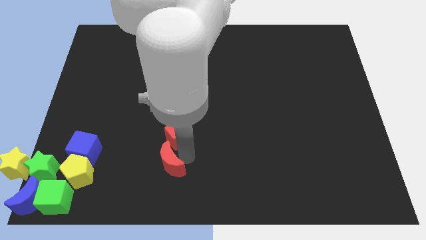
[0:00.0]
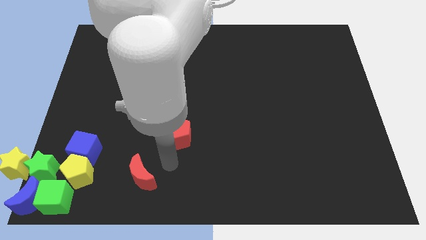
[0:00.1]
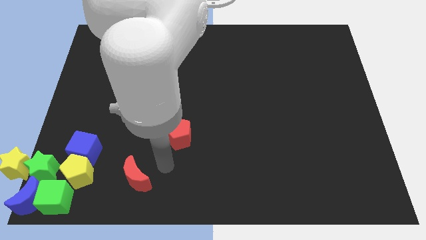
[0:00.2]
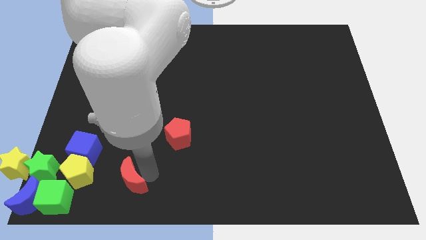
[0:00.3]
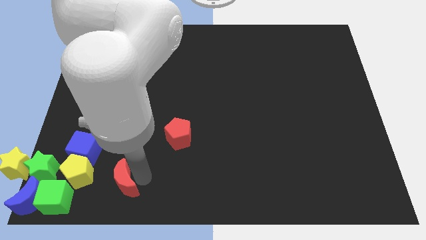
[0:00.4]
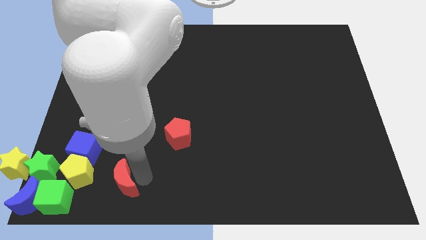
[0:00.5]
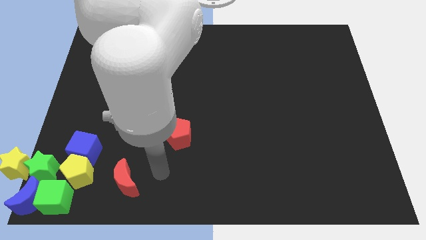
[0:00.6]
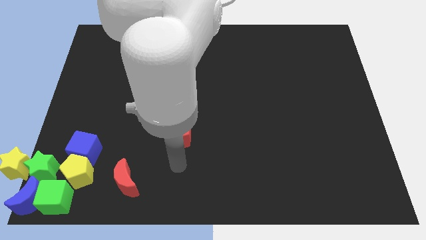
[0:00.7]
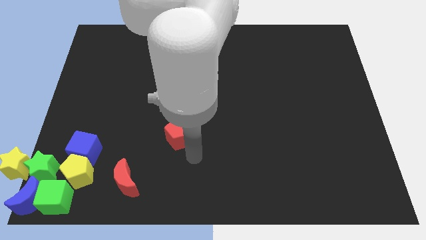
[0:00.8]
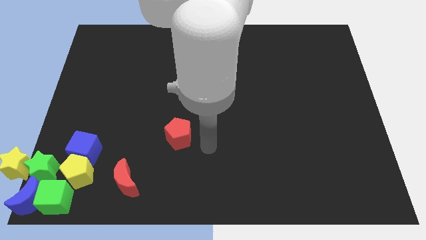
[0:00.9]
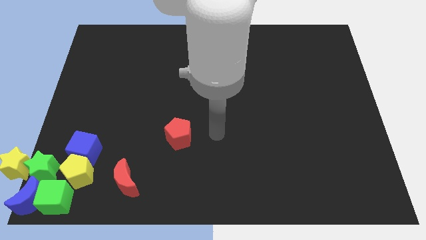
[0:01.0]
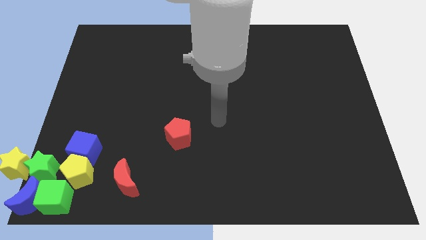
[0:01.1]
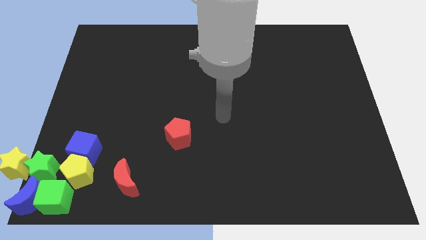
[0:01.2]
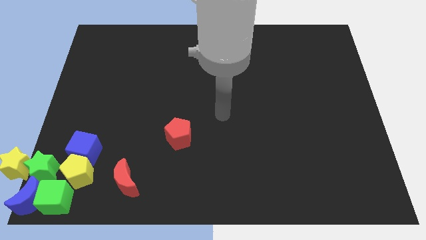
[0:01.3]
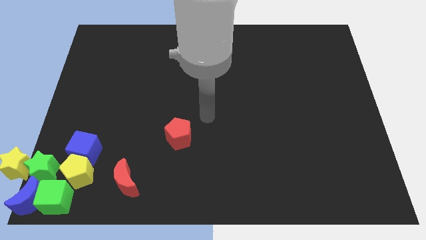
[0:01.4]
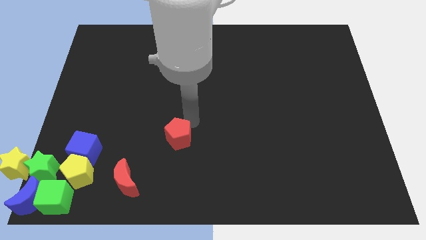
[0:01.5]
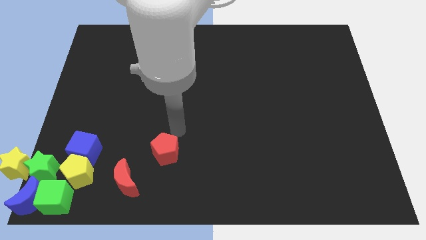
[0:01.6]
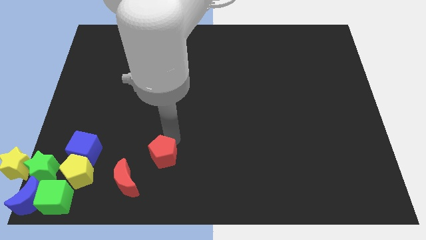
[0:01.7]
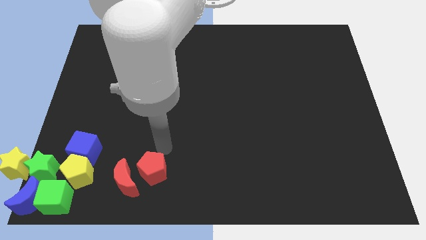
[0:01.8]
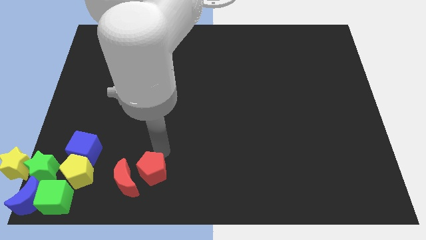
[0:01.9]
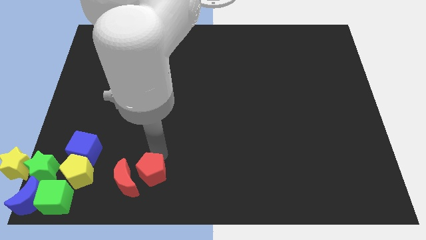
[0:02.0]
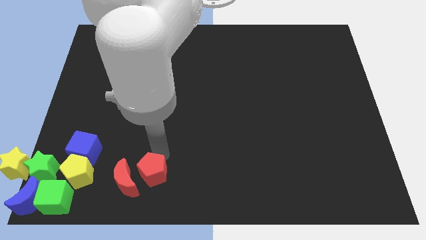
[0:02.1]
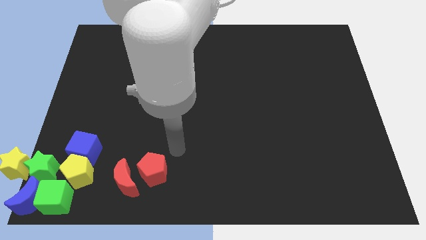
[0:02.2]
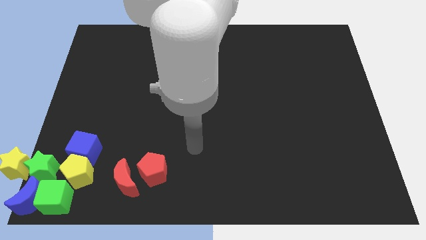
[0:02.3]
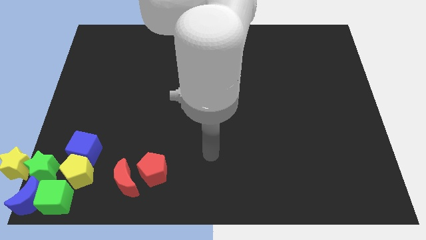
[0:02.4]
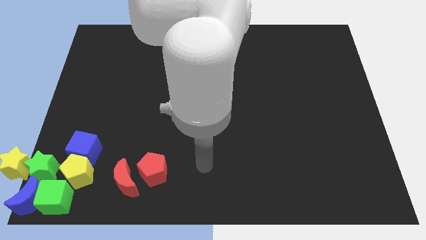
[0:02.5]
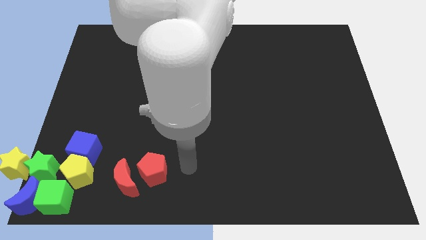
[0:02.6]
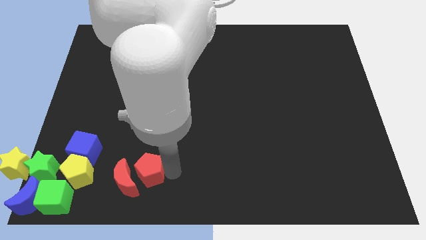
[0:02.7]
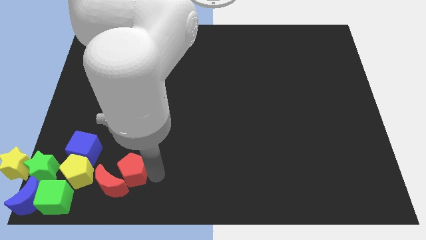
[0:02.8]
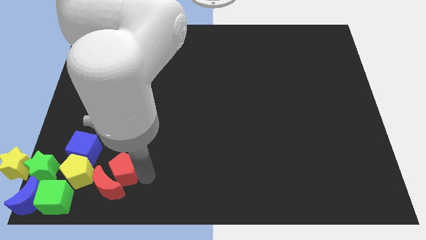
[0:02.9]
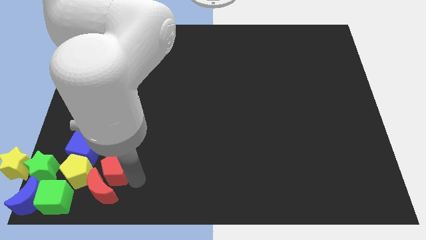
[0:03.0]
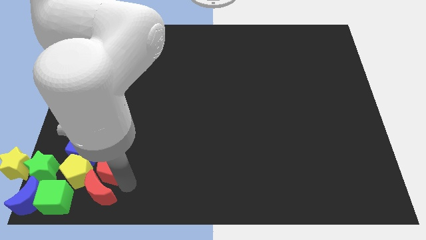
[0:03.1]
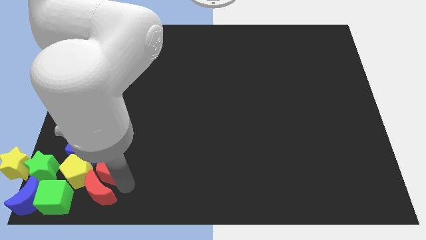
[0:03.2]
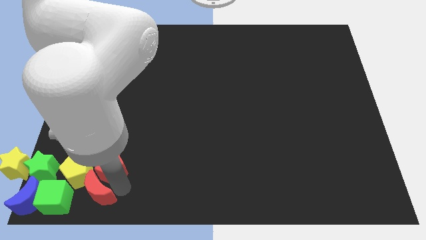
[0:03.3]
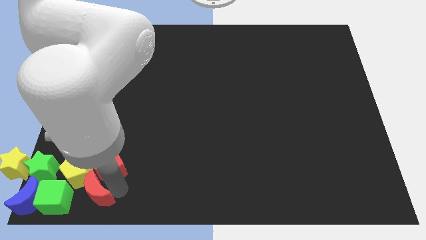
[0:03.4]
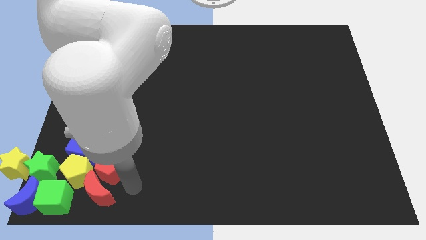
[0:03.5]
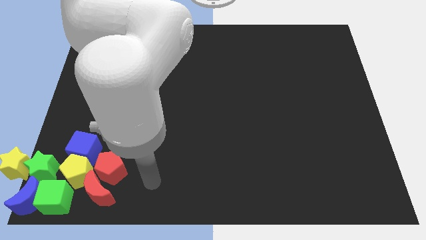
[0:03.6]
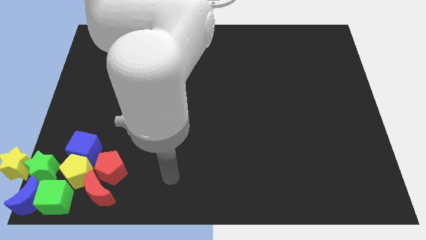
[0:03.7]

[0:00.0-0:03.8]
move both the red blocks into the yellow pentagon

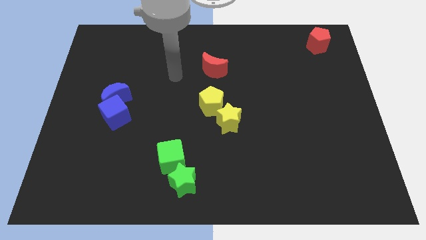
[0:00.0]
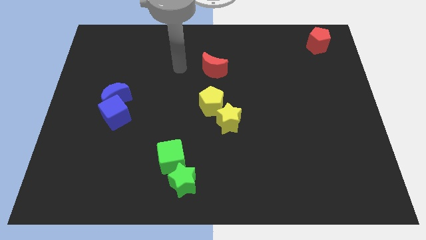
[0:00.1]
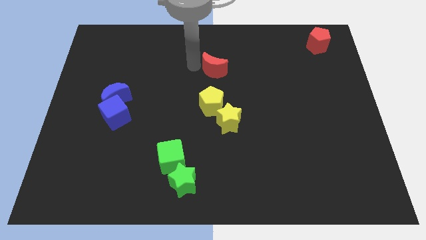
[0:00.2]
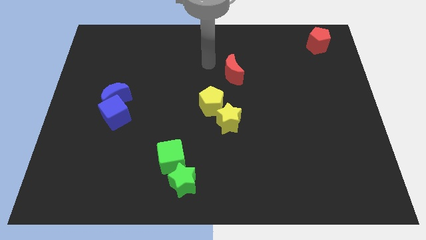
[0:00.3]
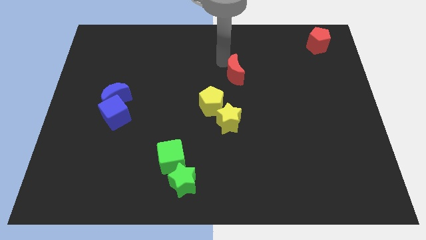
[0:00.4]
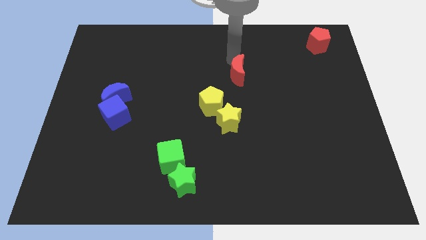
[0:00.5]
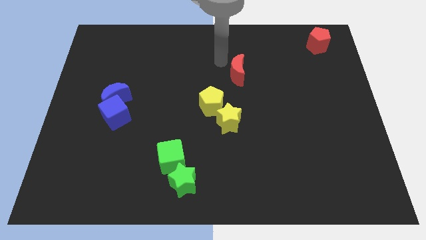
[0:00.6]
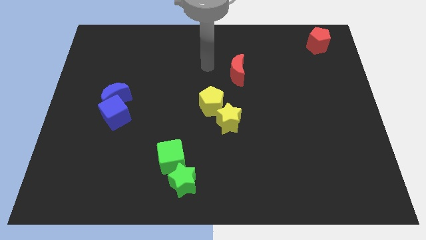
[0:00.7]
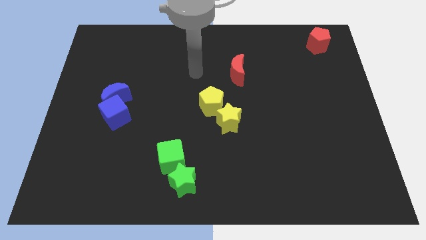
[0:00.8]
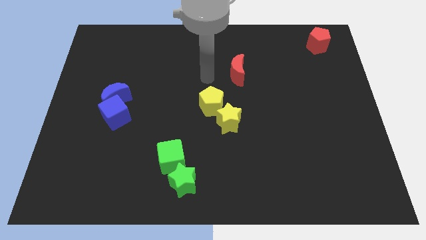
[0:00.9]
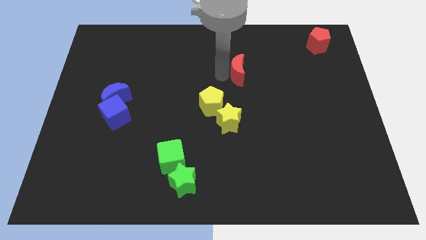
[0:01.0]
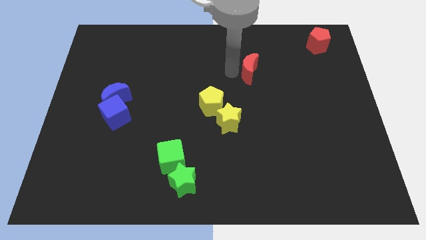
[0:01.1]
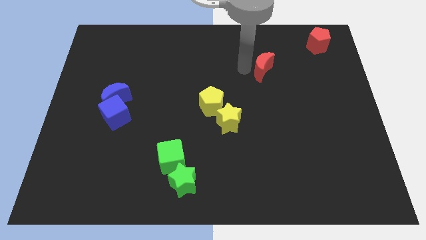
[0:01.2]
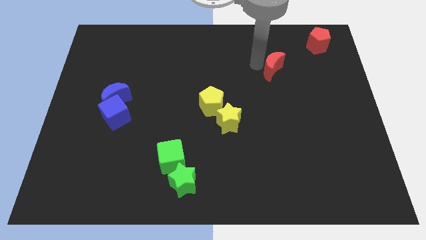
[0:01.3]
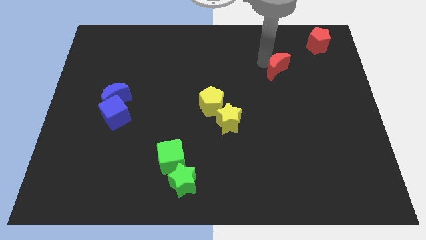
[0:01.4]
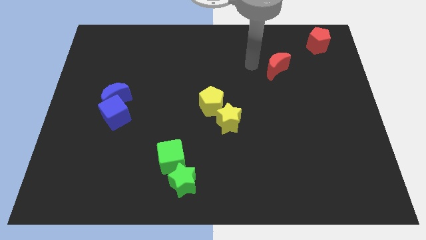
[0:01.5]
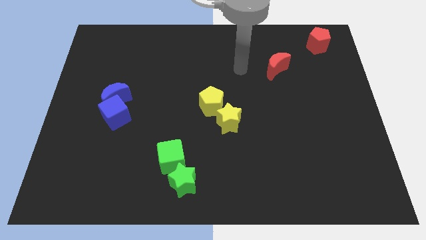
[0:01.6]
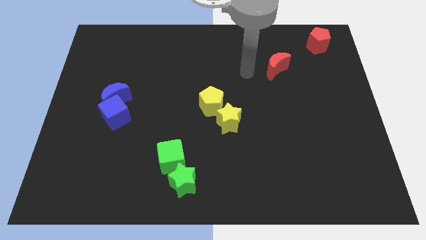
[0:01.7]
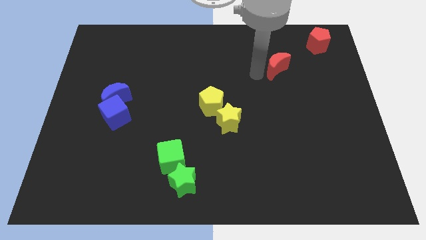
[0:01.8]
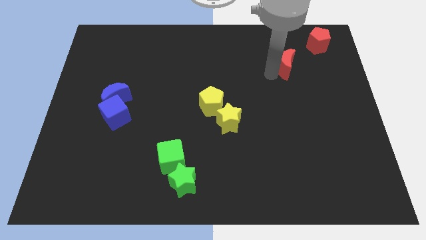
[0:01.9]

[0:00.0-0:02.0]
put the red moon between the yellow star and red pentagon

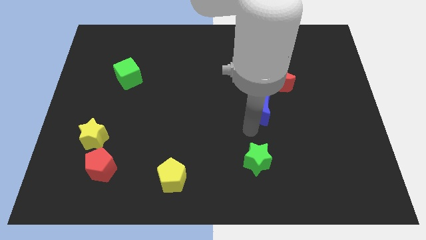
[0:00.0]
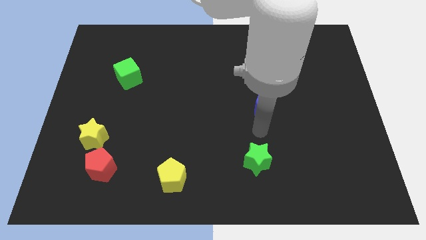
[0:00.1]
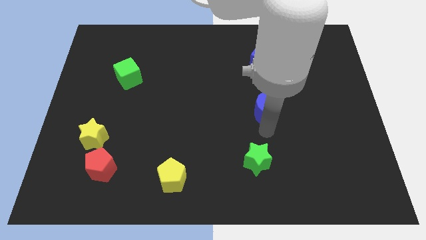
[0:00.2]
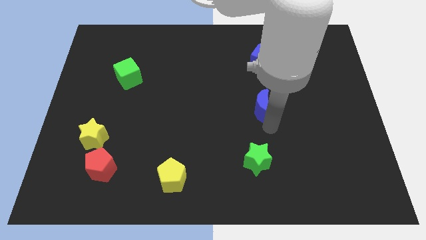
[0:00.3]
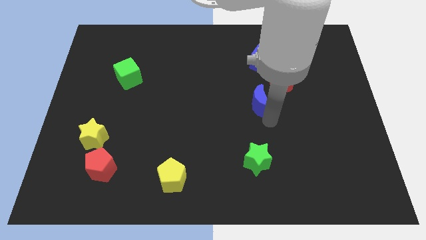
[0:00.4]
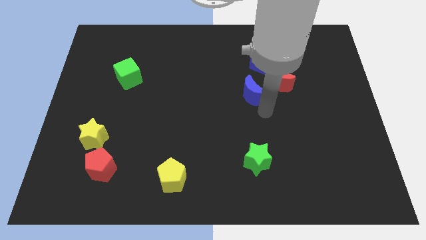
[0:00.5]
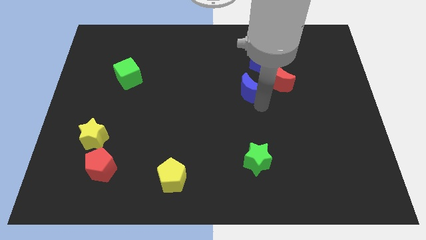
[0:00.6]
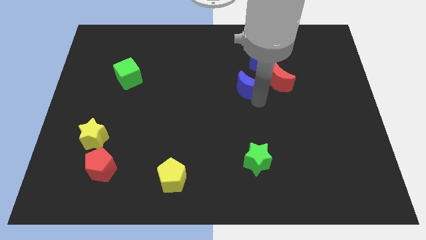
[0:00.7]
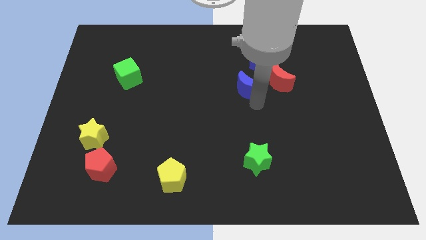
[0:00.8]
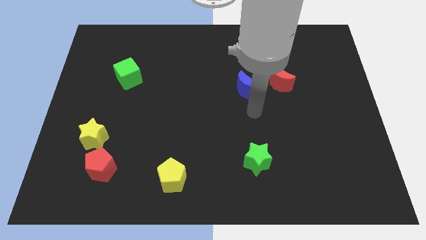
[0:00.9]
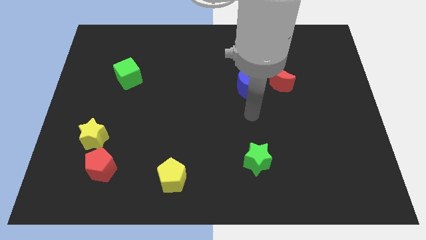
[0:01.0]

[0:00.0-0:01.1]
move the blue crescent towards top

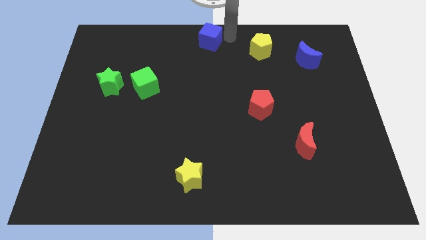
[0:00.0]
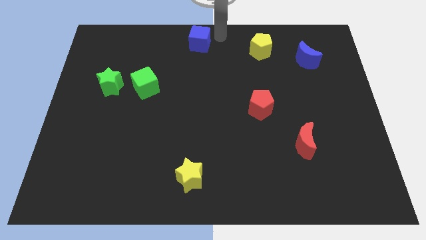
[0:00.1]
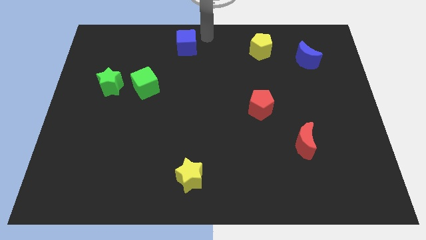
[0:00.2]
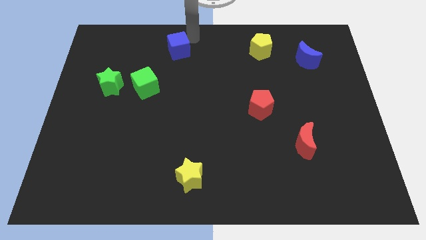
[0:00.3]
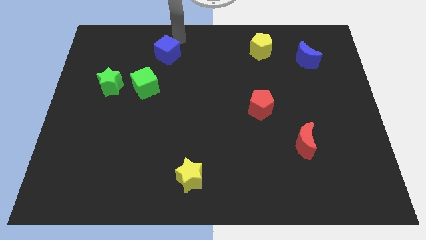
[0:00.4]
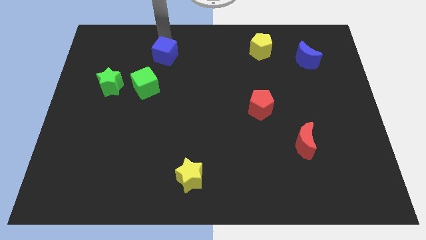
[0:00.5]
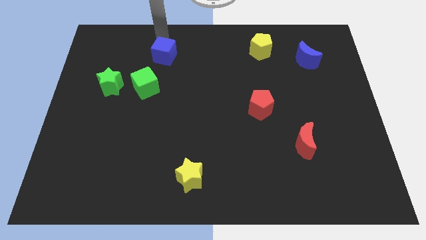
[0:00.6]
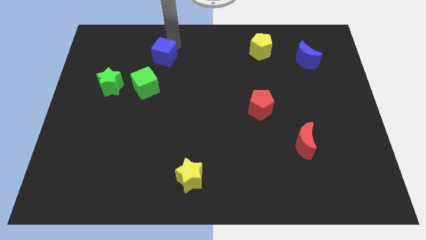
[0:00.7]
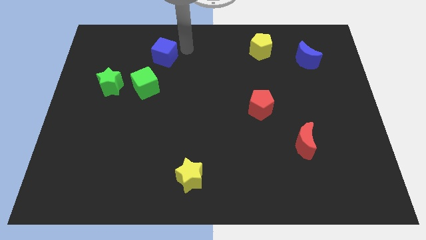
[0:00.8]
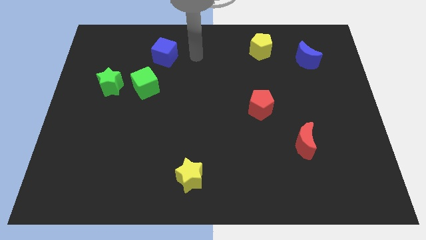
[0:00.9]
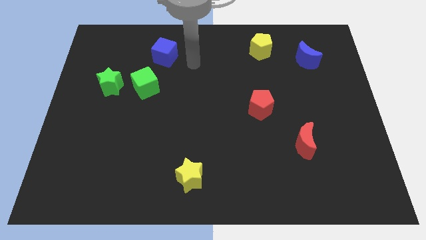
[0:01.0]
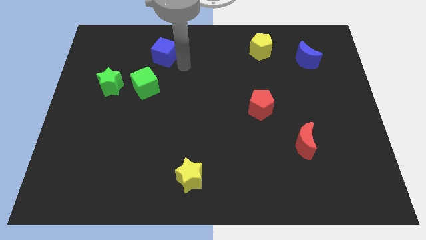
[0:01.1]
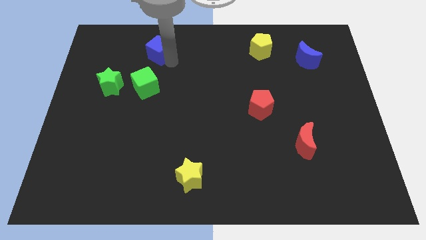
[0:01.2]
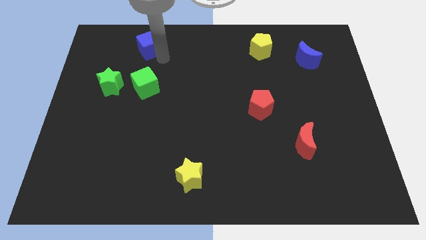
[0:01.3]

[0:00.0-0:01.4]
place blue ube to the top of green cube

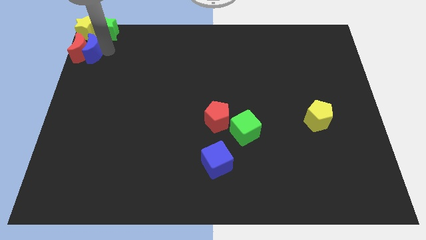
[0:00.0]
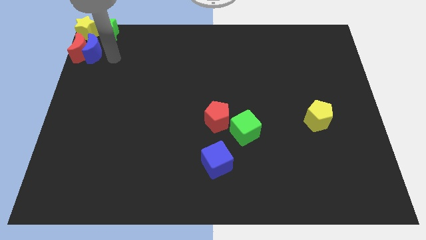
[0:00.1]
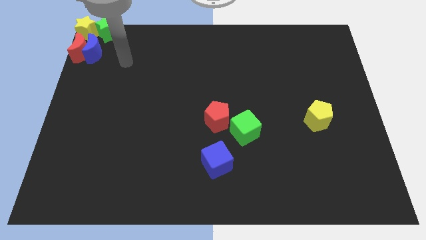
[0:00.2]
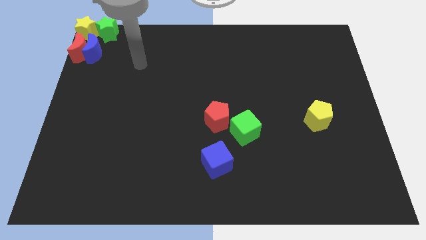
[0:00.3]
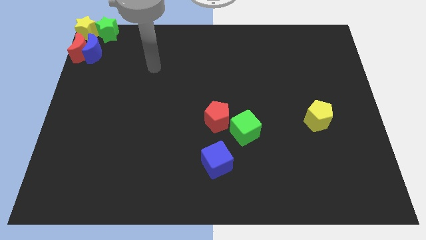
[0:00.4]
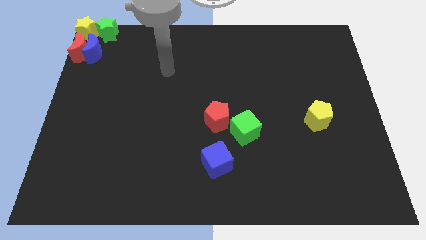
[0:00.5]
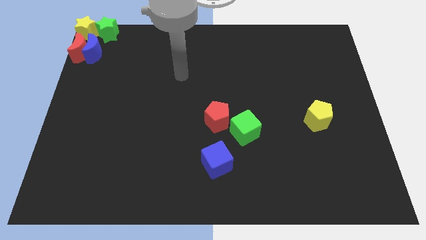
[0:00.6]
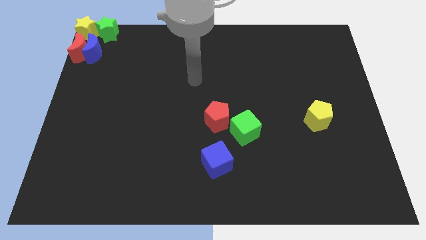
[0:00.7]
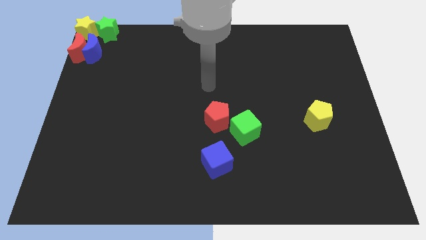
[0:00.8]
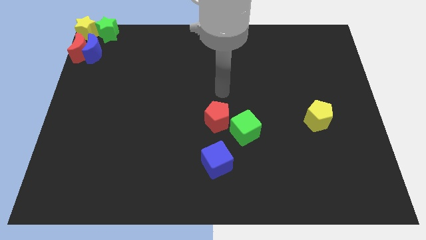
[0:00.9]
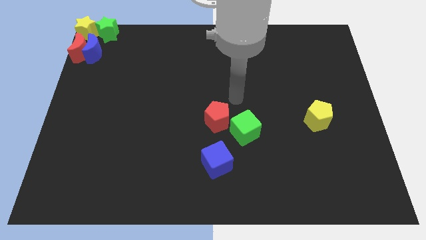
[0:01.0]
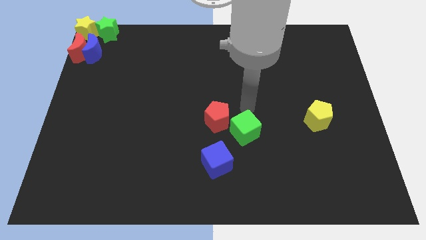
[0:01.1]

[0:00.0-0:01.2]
move the arm diagonally down
